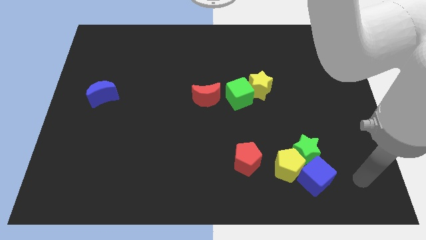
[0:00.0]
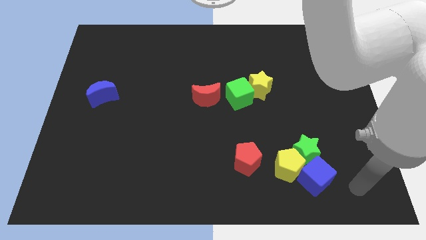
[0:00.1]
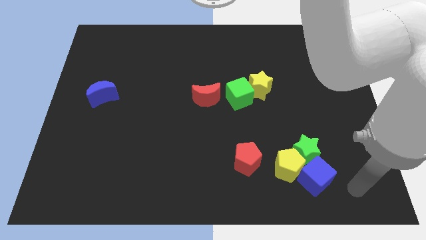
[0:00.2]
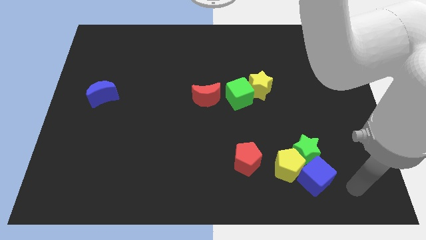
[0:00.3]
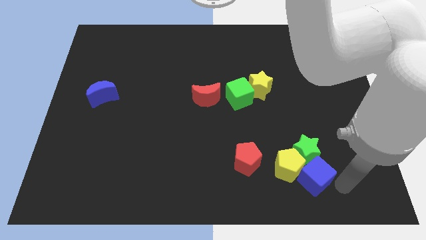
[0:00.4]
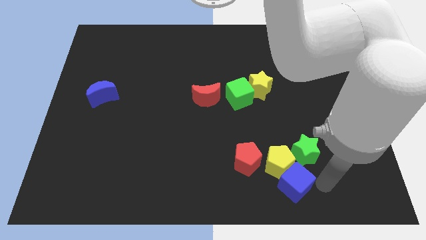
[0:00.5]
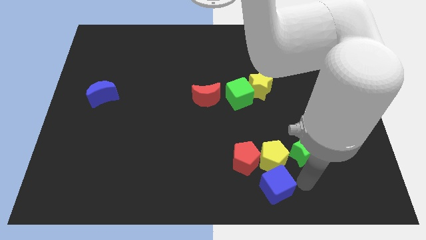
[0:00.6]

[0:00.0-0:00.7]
push blue cube bellow yellow pentagon

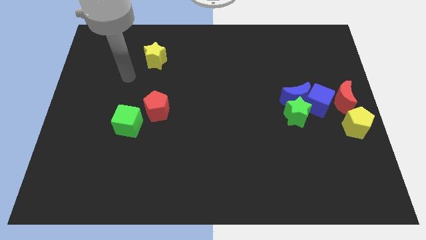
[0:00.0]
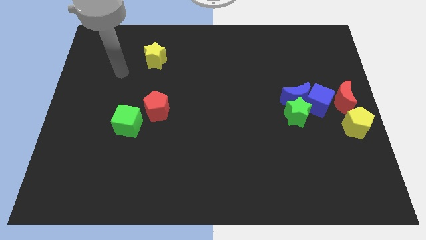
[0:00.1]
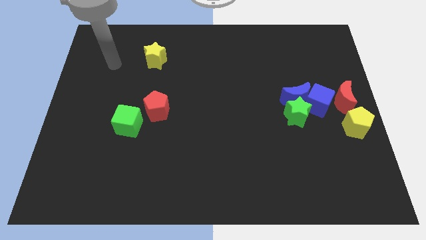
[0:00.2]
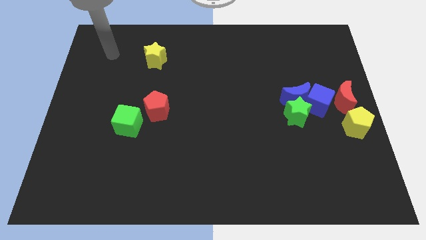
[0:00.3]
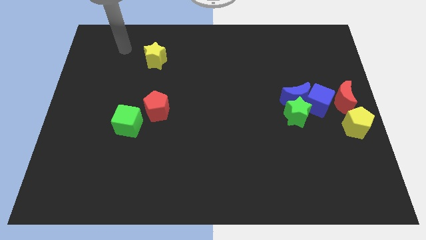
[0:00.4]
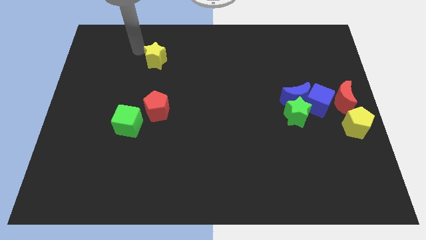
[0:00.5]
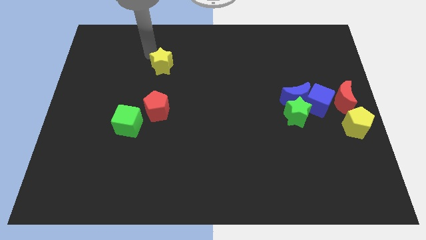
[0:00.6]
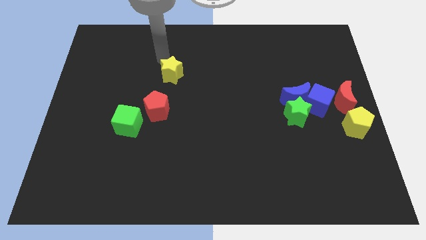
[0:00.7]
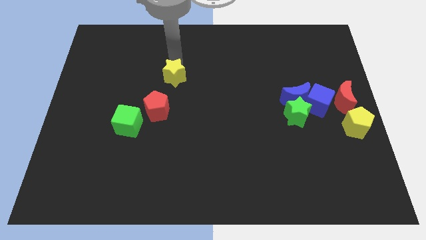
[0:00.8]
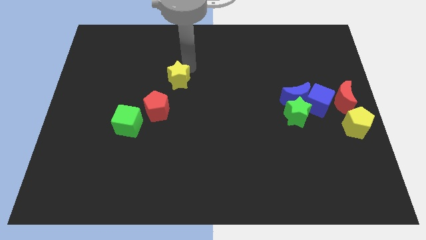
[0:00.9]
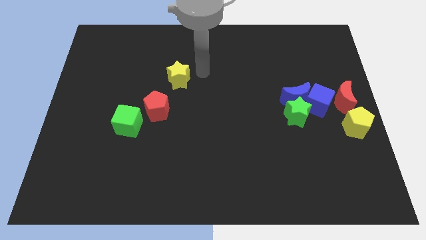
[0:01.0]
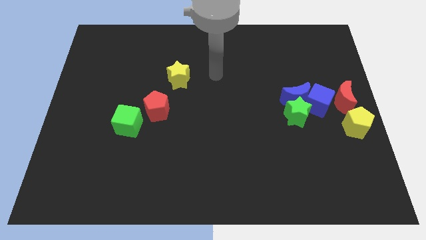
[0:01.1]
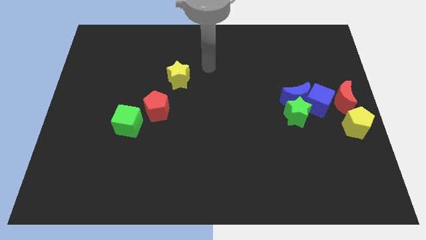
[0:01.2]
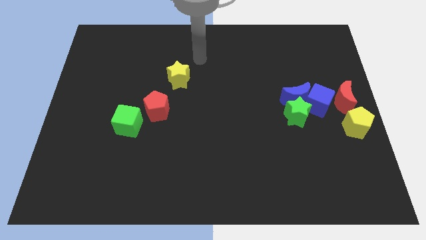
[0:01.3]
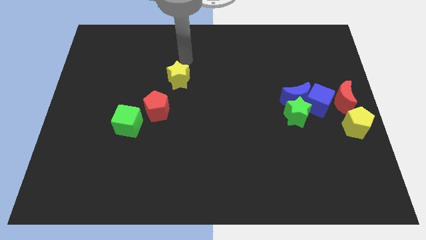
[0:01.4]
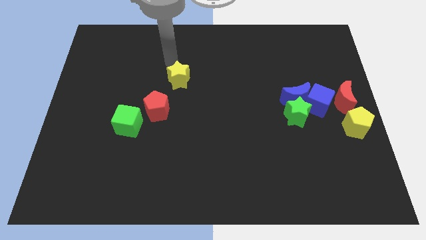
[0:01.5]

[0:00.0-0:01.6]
push the yellow star diagonal above the red pentagon

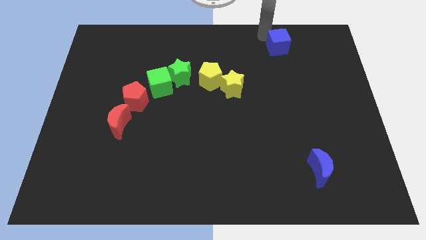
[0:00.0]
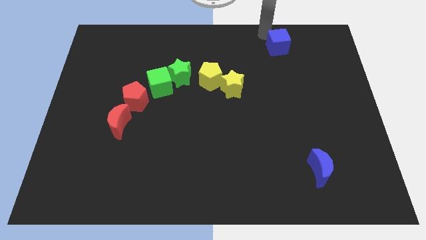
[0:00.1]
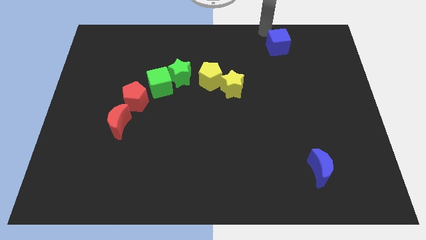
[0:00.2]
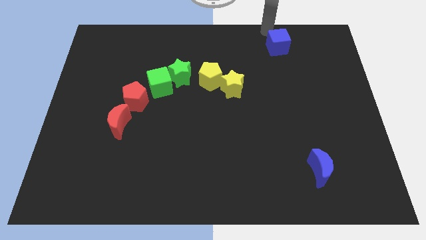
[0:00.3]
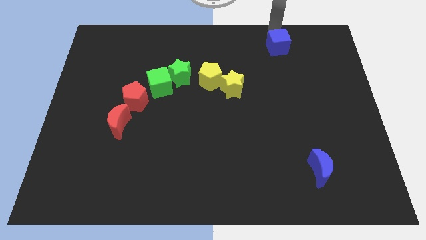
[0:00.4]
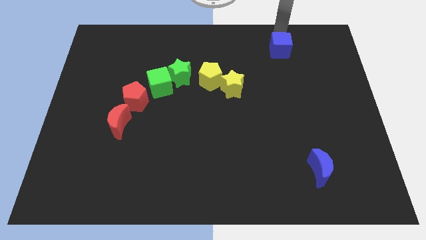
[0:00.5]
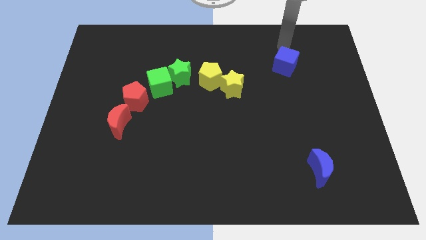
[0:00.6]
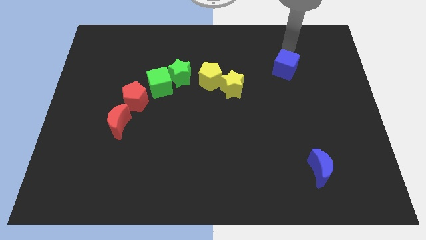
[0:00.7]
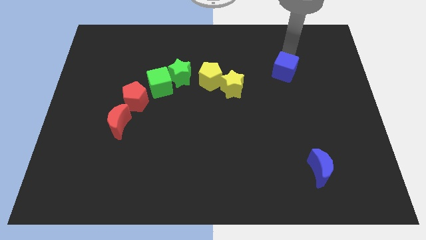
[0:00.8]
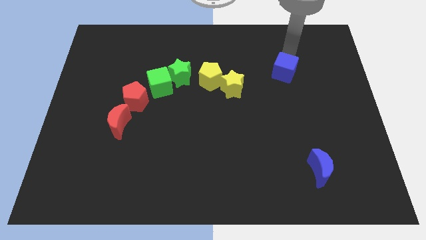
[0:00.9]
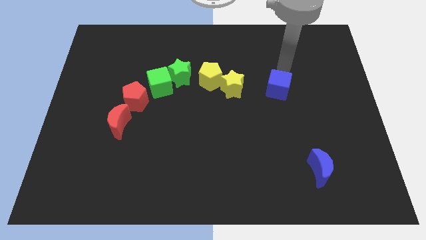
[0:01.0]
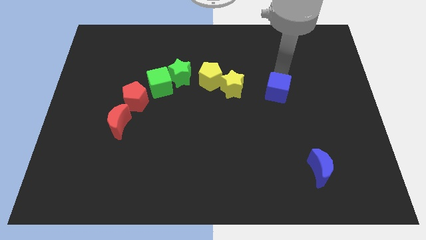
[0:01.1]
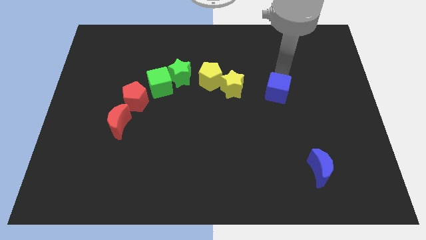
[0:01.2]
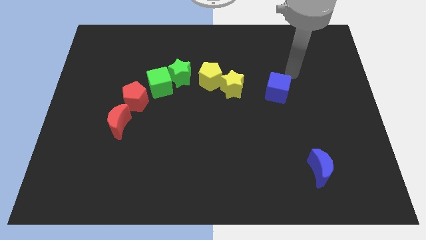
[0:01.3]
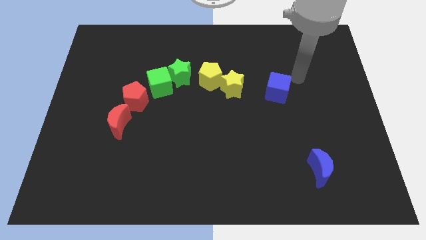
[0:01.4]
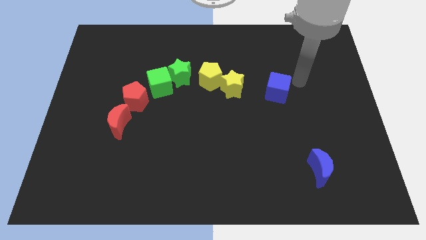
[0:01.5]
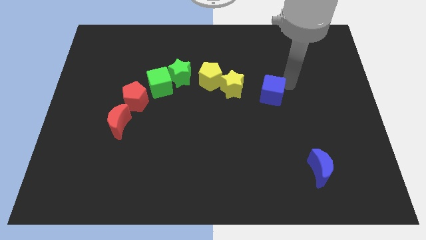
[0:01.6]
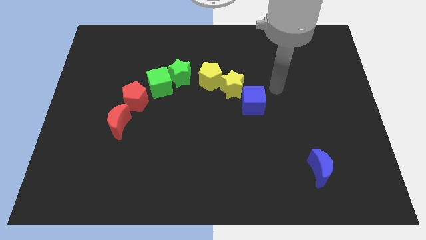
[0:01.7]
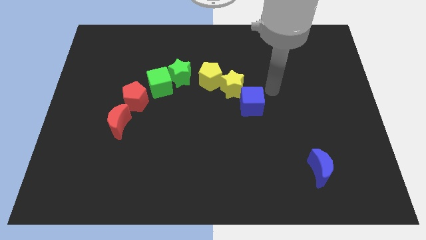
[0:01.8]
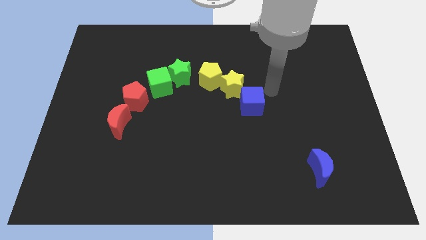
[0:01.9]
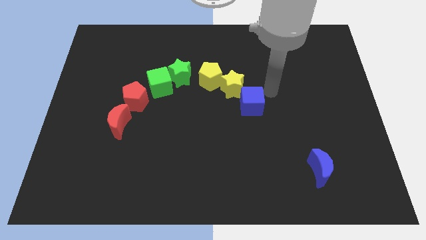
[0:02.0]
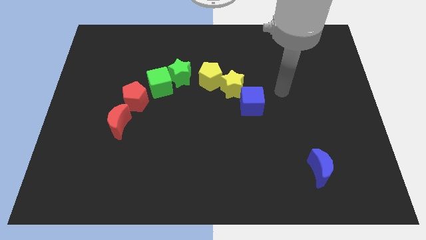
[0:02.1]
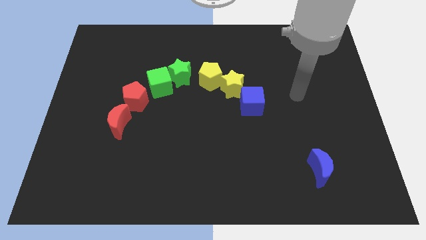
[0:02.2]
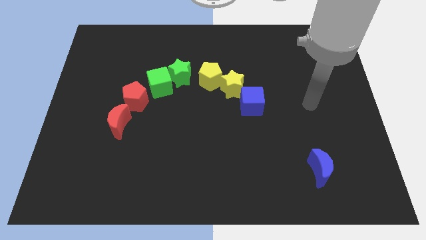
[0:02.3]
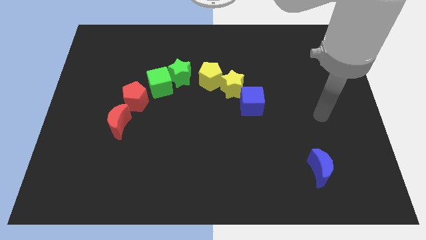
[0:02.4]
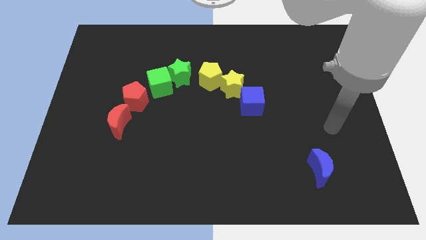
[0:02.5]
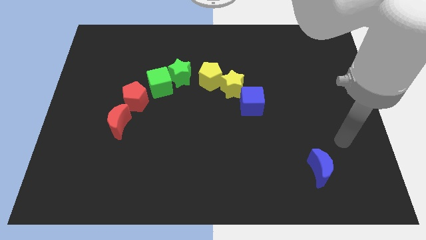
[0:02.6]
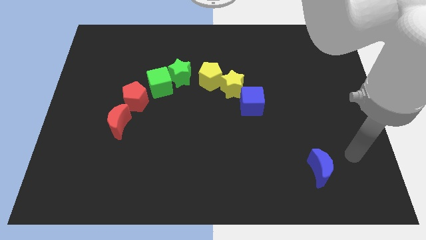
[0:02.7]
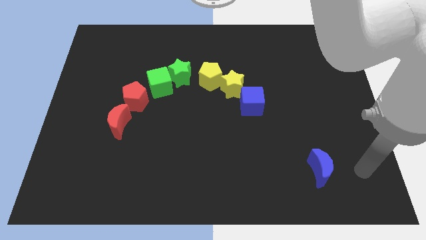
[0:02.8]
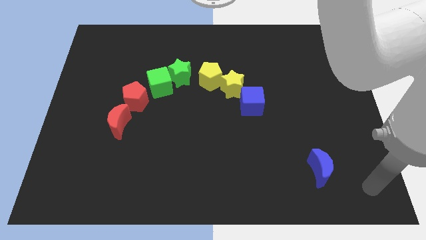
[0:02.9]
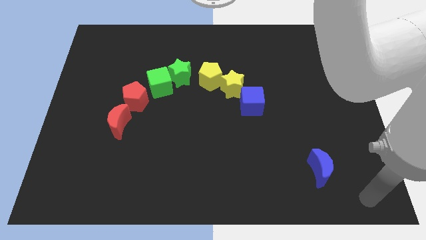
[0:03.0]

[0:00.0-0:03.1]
push the blue moon to the bottom right to the yellow star

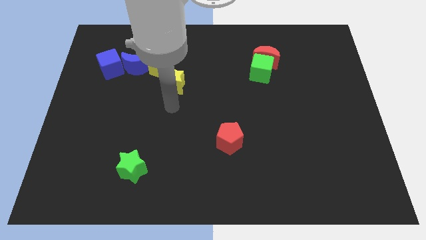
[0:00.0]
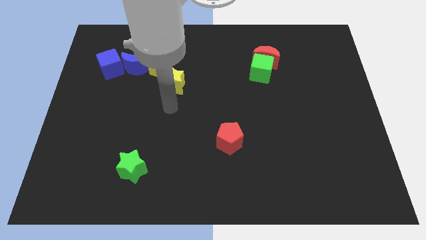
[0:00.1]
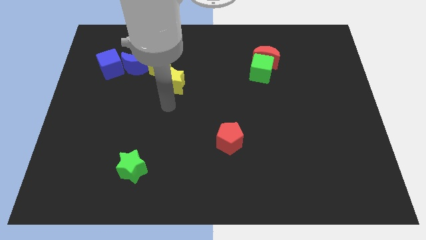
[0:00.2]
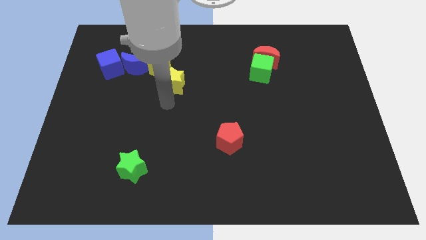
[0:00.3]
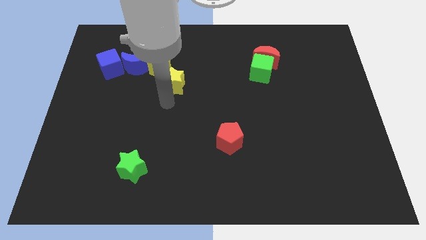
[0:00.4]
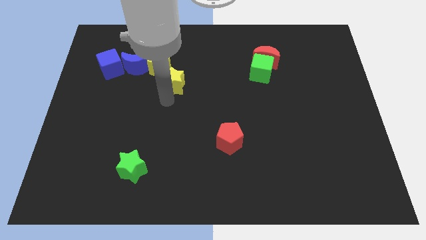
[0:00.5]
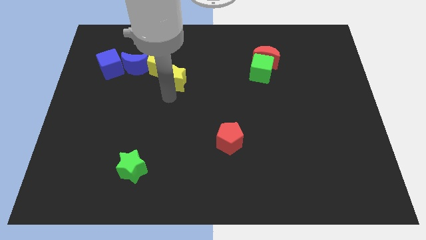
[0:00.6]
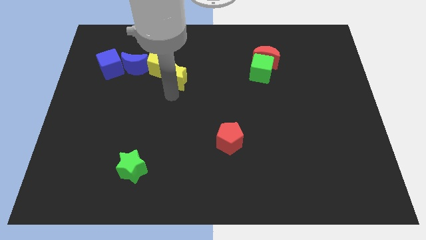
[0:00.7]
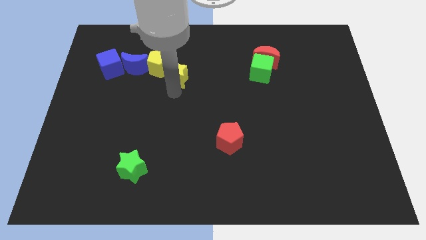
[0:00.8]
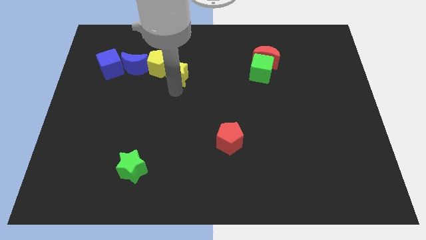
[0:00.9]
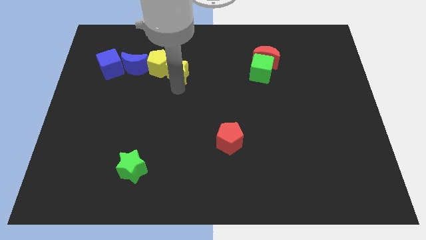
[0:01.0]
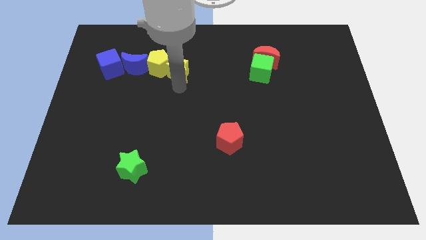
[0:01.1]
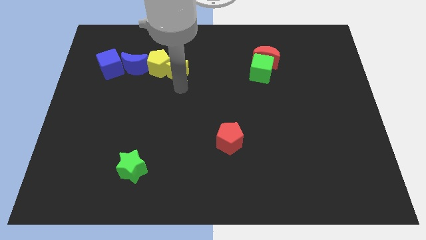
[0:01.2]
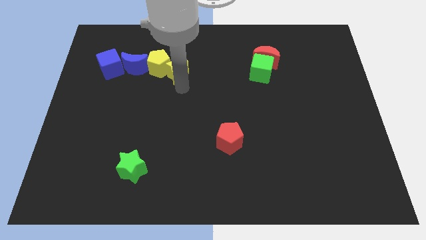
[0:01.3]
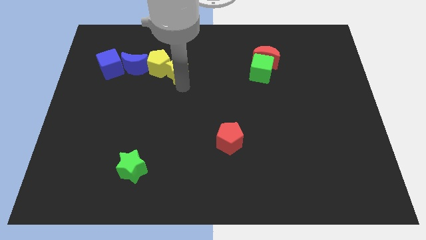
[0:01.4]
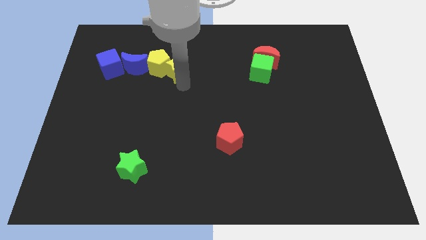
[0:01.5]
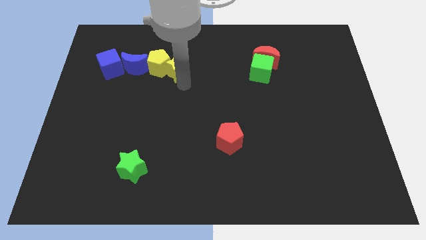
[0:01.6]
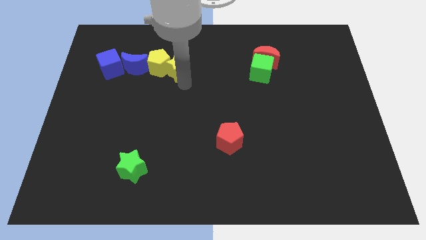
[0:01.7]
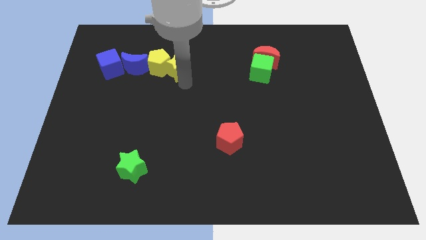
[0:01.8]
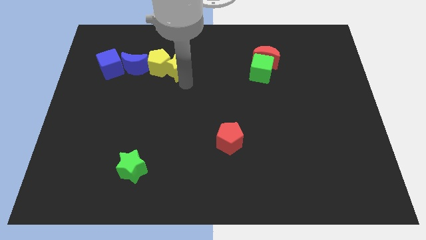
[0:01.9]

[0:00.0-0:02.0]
push the yellow star right side to the yellow pentagon

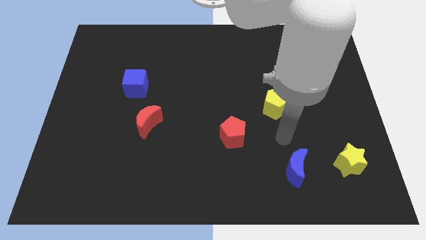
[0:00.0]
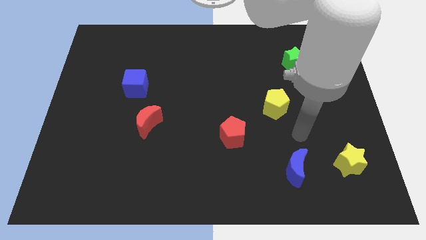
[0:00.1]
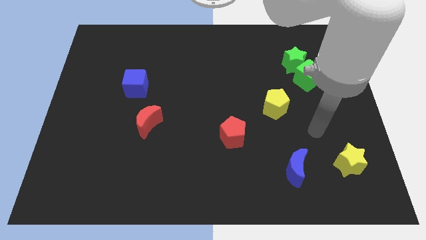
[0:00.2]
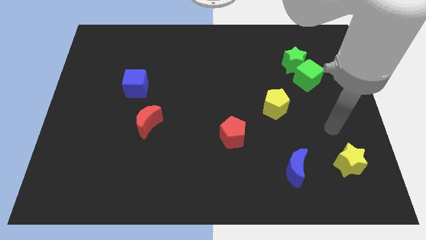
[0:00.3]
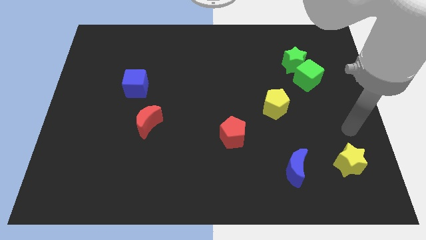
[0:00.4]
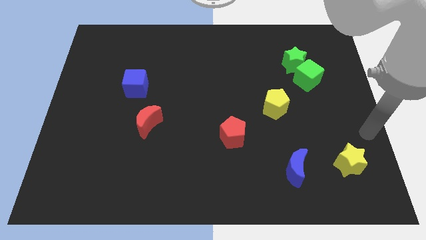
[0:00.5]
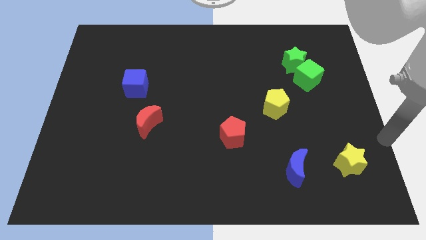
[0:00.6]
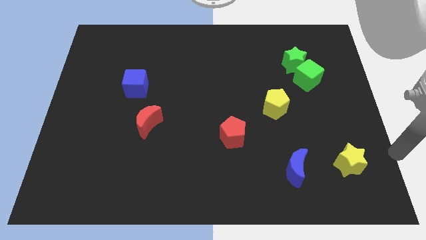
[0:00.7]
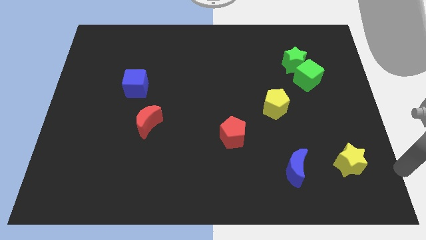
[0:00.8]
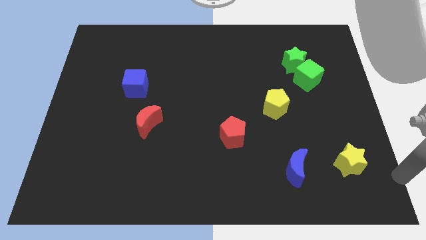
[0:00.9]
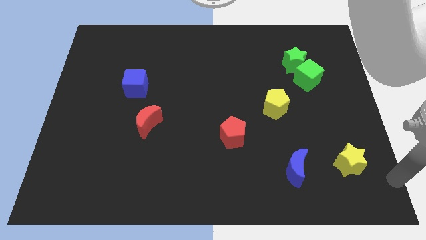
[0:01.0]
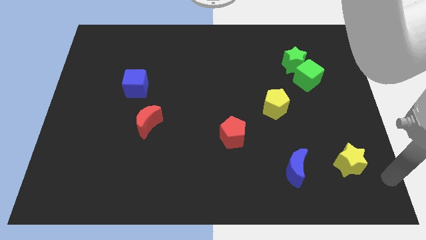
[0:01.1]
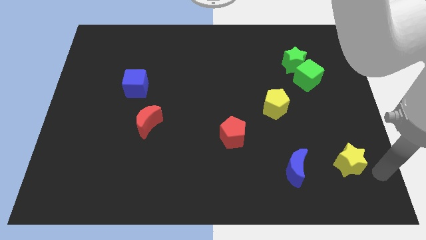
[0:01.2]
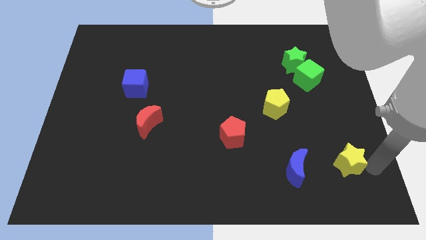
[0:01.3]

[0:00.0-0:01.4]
move your arm towards the bottom right side of the yellow star
